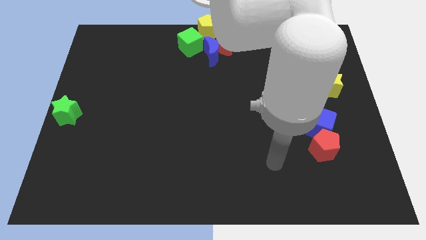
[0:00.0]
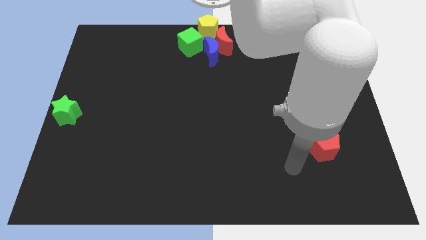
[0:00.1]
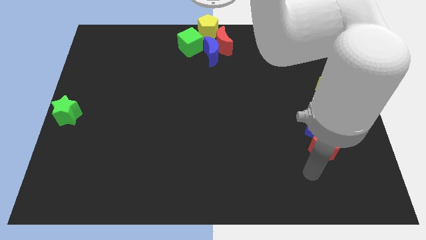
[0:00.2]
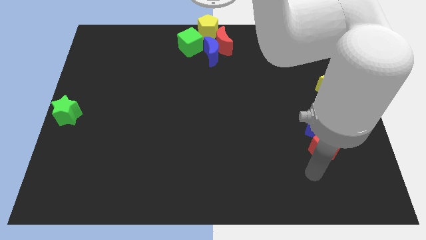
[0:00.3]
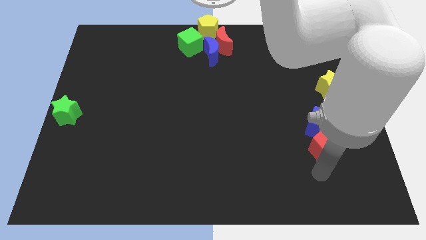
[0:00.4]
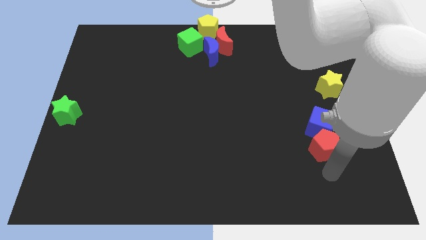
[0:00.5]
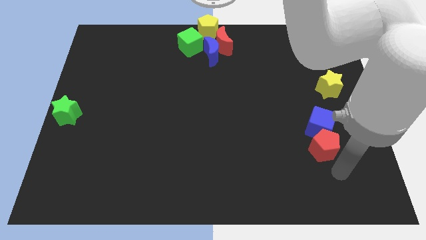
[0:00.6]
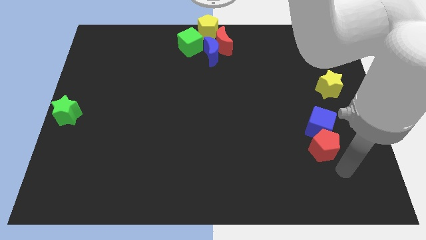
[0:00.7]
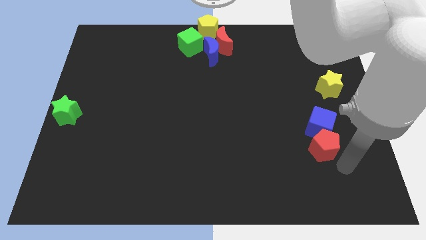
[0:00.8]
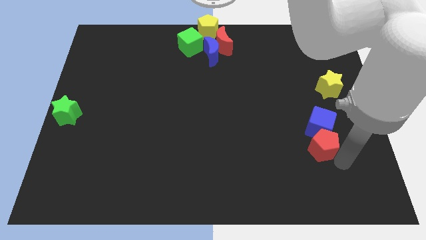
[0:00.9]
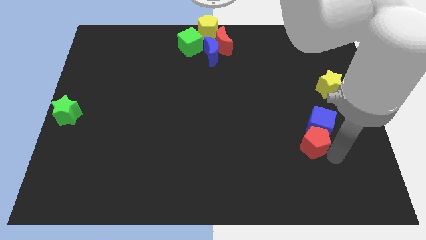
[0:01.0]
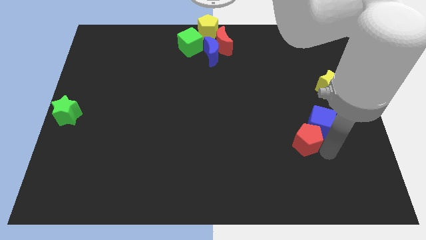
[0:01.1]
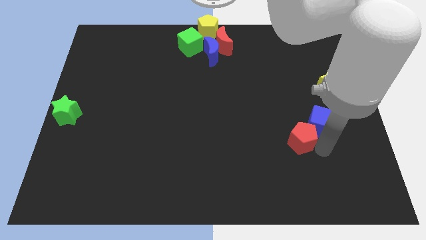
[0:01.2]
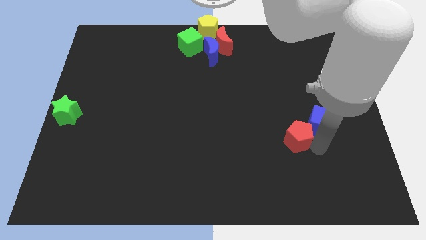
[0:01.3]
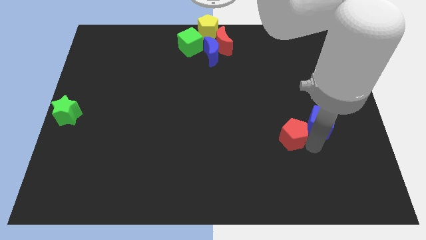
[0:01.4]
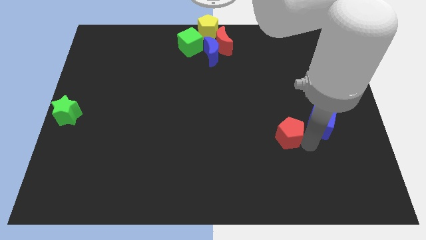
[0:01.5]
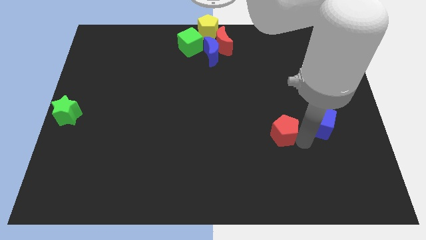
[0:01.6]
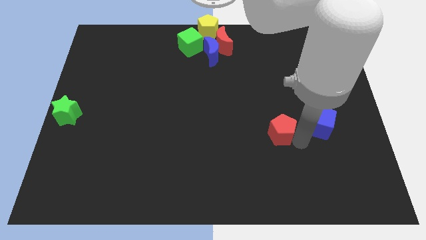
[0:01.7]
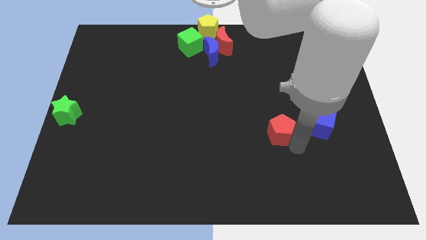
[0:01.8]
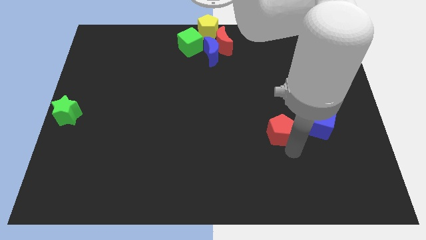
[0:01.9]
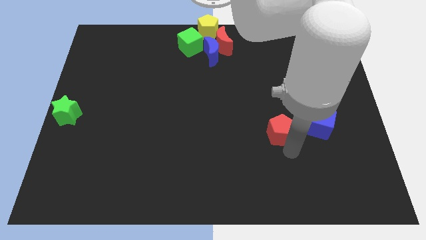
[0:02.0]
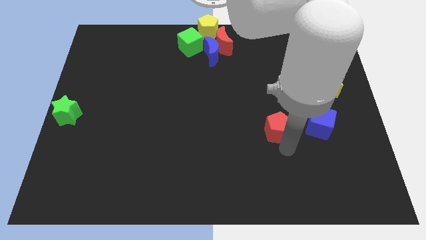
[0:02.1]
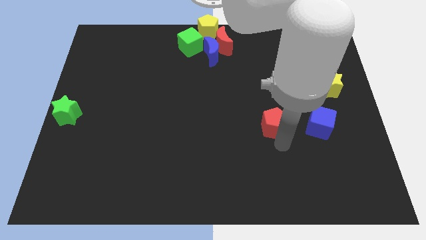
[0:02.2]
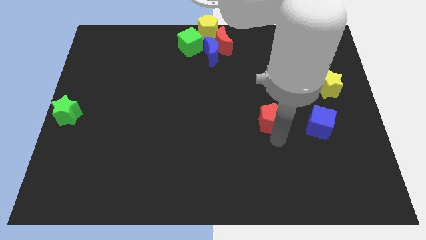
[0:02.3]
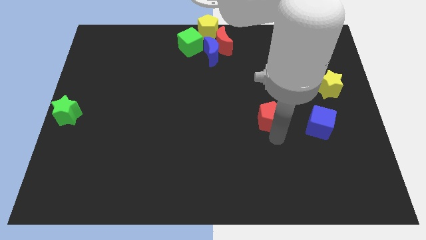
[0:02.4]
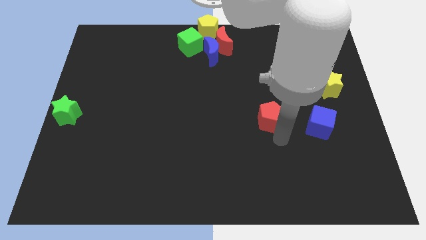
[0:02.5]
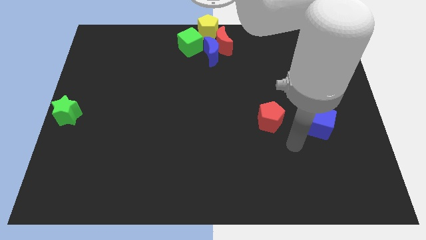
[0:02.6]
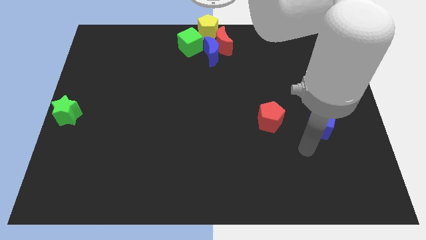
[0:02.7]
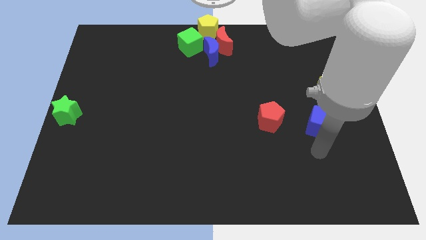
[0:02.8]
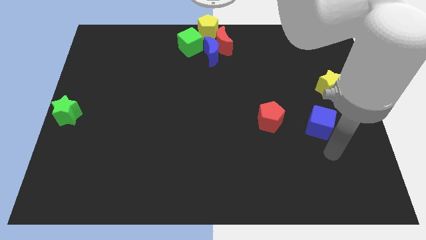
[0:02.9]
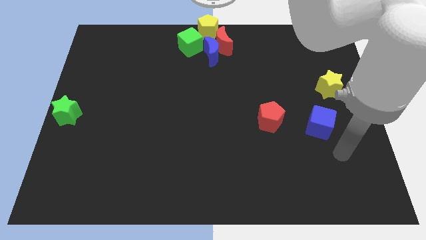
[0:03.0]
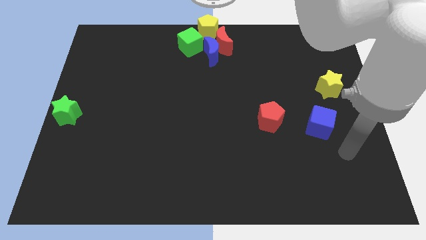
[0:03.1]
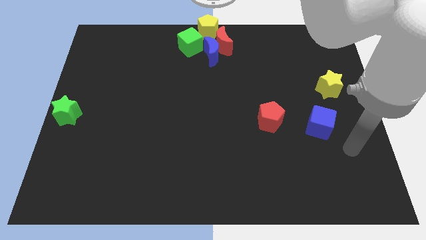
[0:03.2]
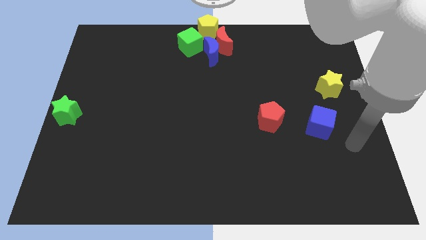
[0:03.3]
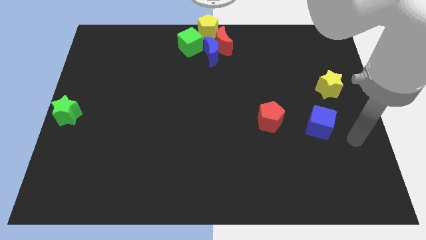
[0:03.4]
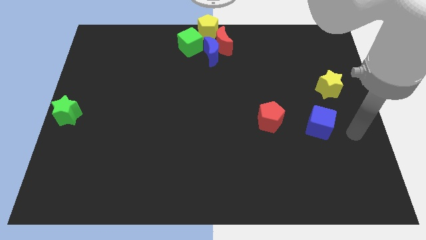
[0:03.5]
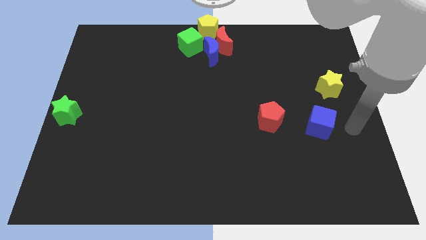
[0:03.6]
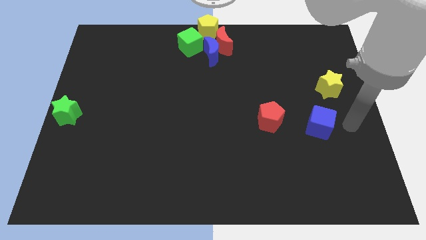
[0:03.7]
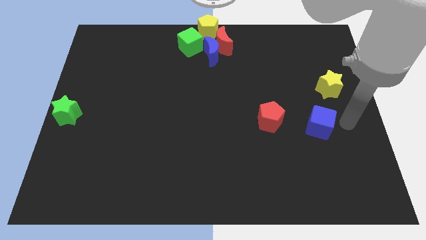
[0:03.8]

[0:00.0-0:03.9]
place the red pentagon parallel to blue cube

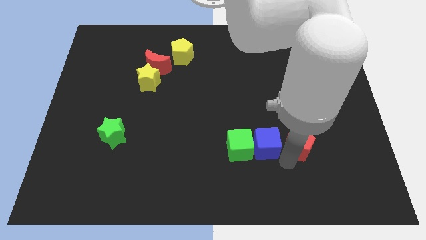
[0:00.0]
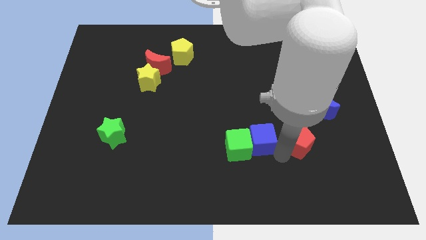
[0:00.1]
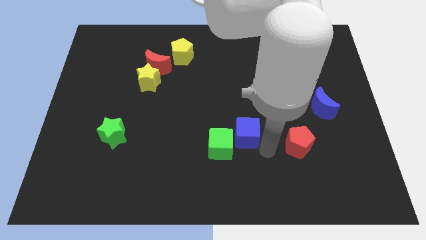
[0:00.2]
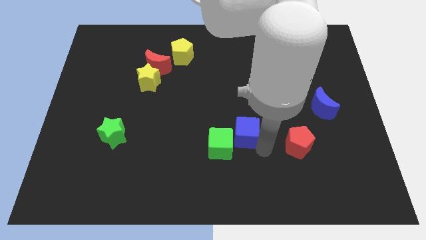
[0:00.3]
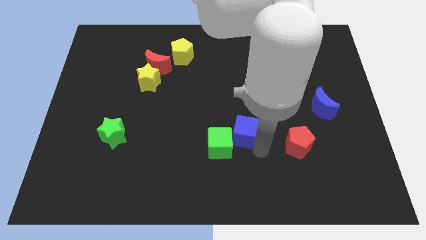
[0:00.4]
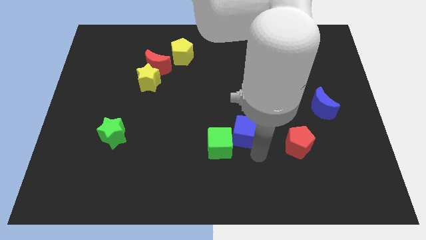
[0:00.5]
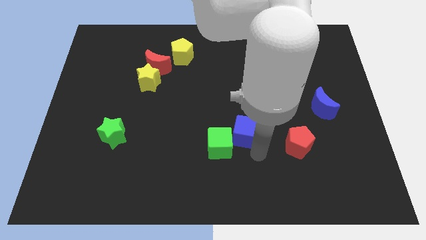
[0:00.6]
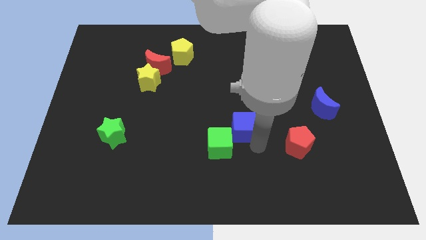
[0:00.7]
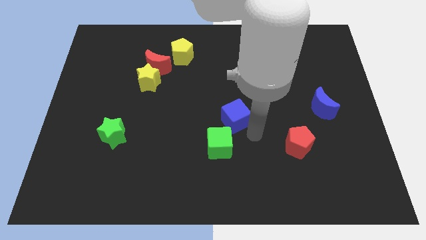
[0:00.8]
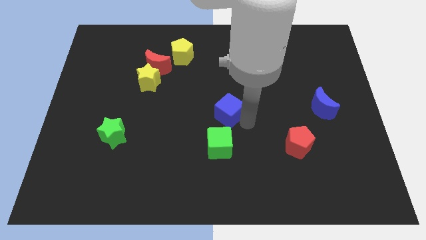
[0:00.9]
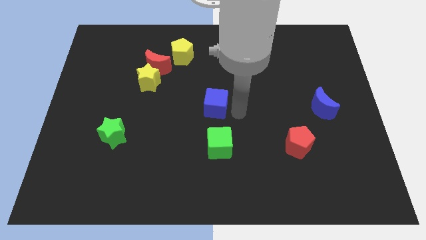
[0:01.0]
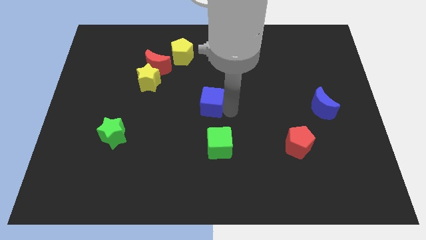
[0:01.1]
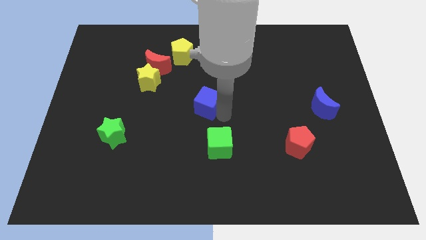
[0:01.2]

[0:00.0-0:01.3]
push the blue cube slightly to the top of the board

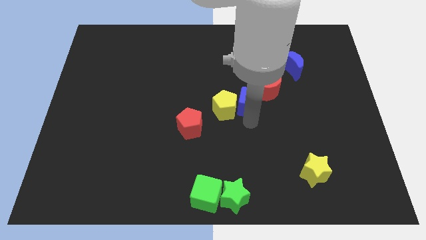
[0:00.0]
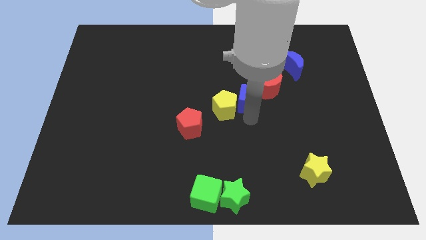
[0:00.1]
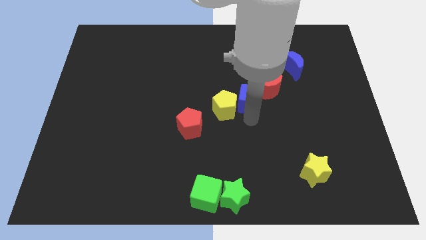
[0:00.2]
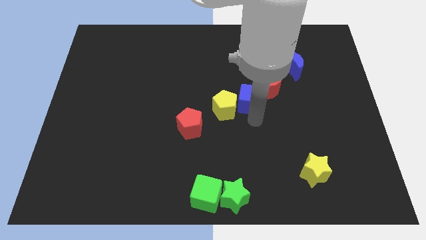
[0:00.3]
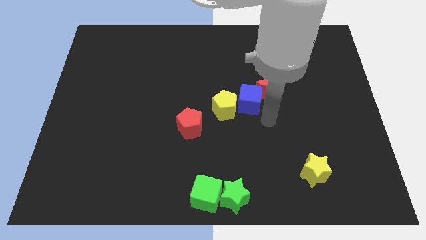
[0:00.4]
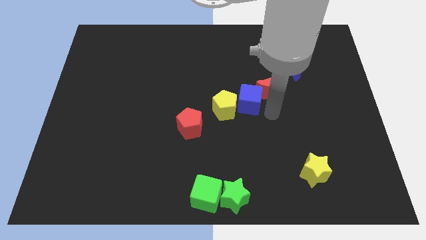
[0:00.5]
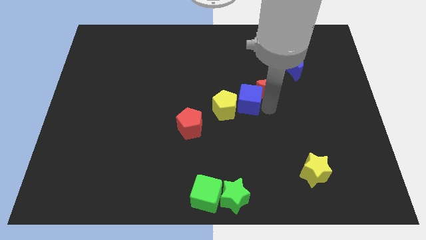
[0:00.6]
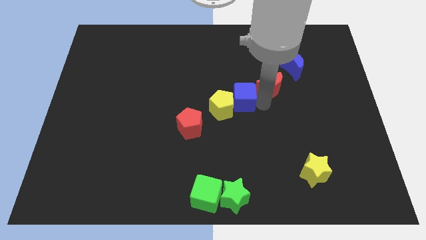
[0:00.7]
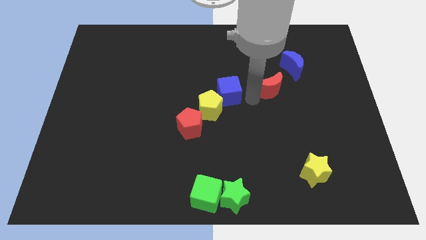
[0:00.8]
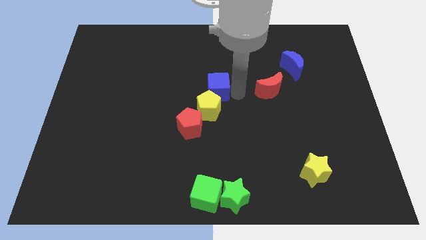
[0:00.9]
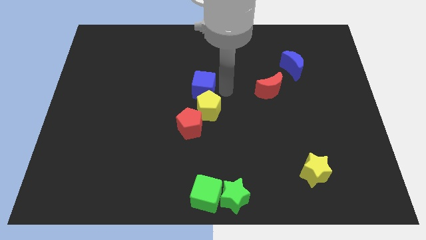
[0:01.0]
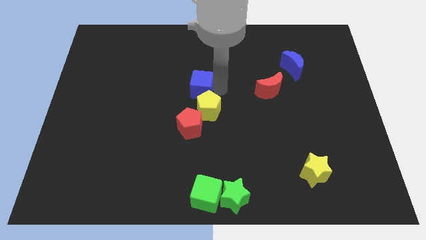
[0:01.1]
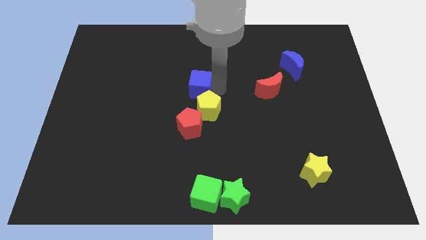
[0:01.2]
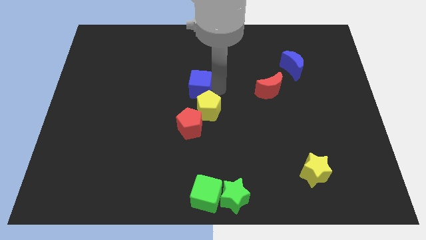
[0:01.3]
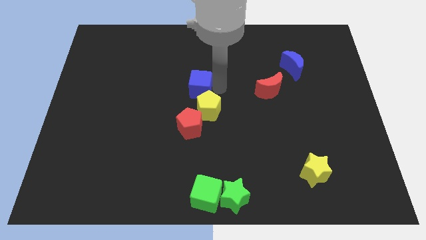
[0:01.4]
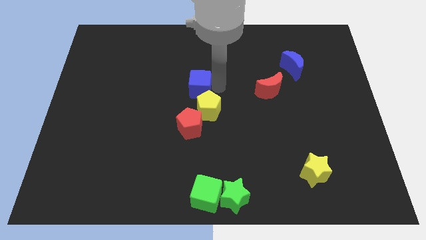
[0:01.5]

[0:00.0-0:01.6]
place the blue cube above the yellow pentagon

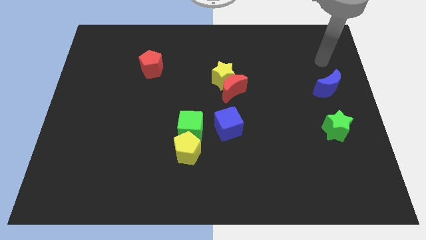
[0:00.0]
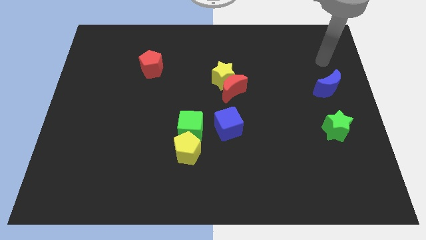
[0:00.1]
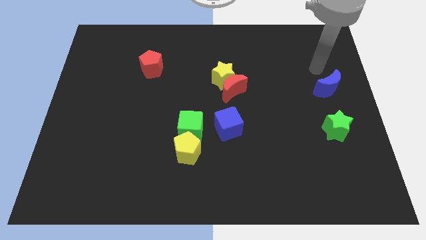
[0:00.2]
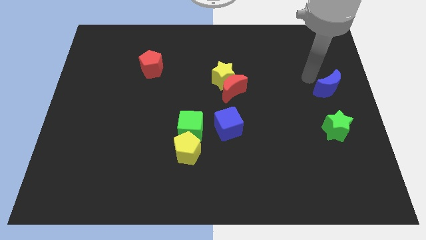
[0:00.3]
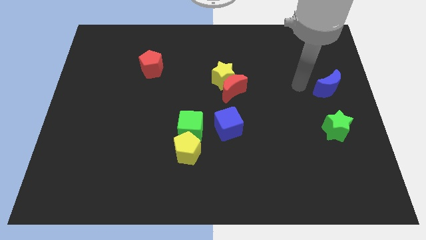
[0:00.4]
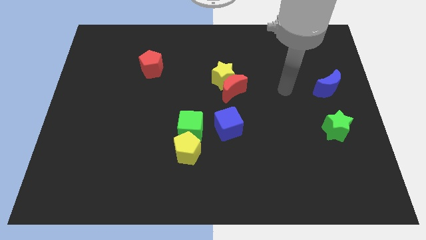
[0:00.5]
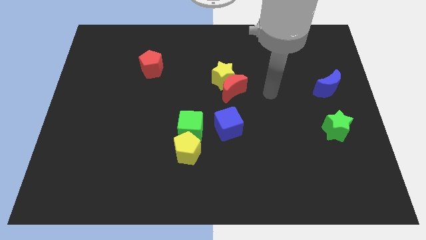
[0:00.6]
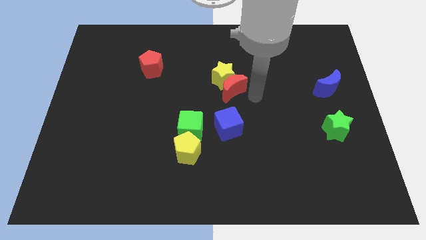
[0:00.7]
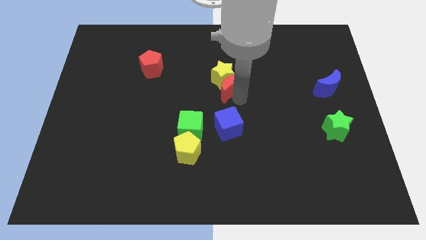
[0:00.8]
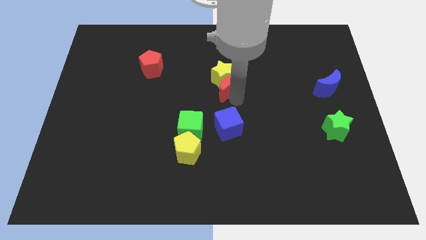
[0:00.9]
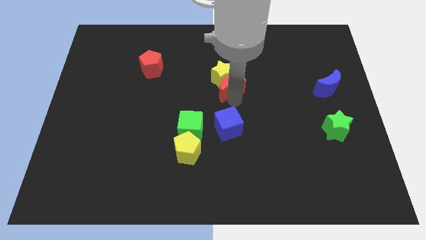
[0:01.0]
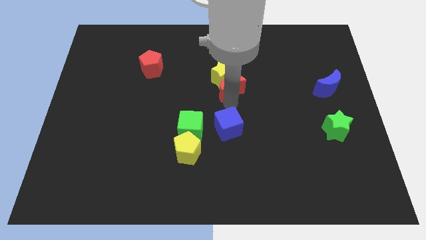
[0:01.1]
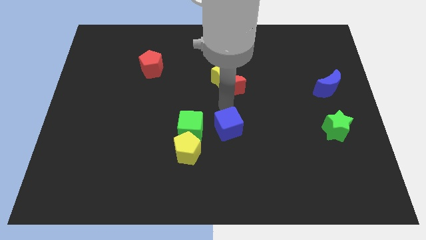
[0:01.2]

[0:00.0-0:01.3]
tap the red moon

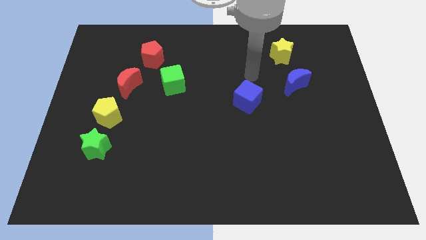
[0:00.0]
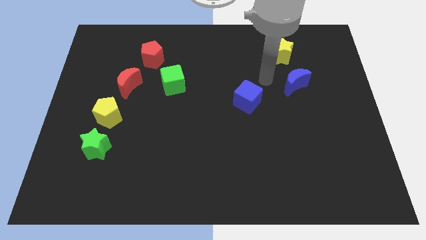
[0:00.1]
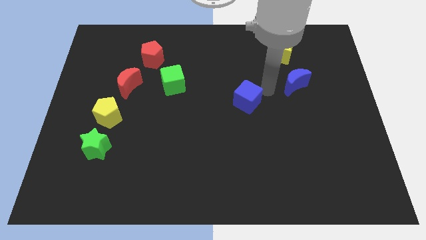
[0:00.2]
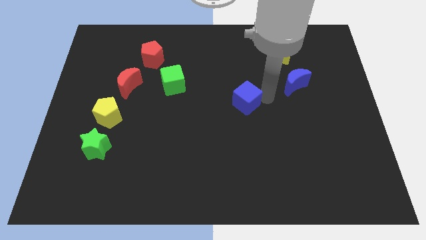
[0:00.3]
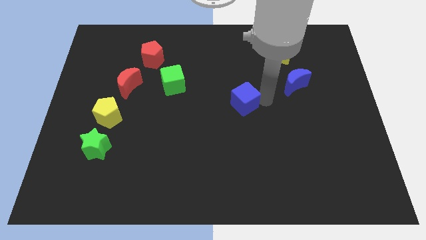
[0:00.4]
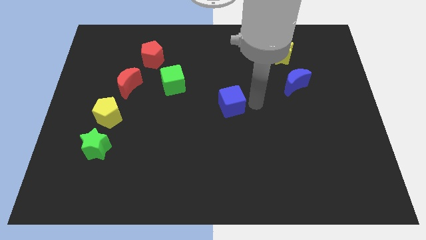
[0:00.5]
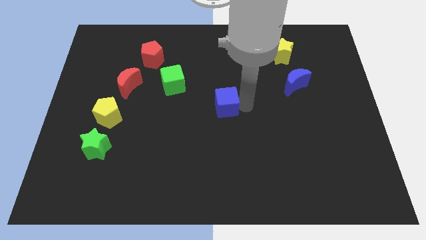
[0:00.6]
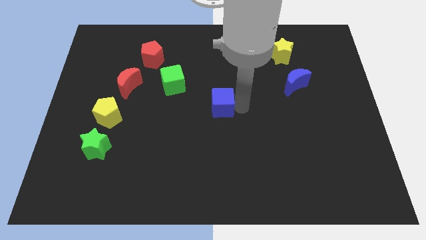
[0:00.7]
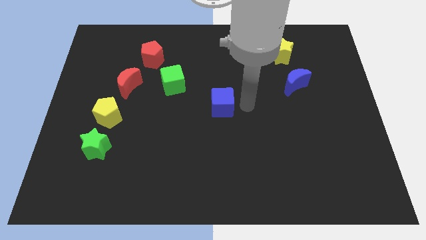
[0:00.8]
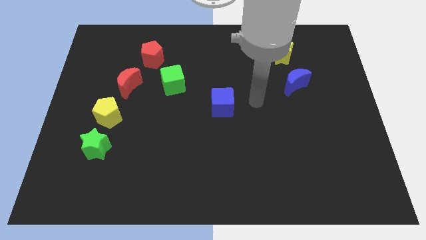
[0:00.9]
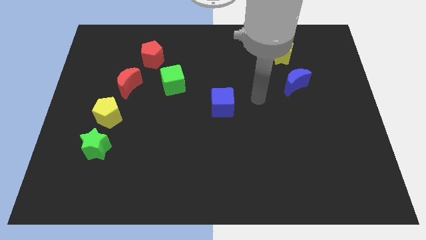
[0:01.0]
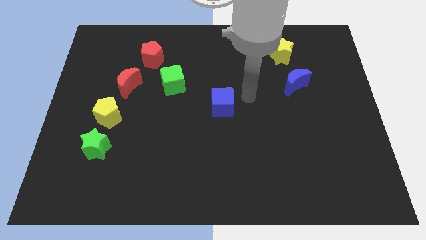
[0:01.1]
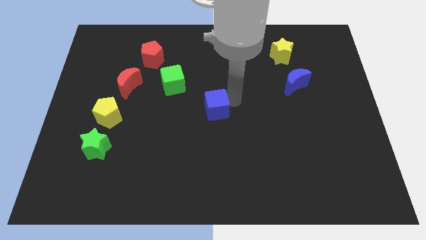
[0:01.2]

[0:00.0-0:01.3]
push the blue cube to the center
